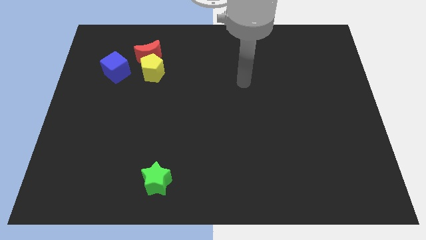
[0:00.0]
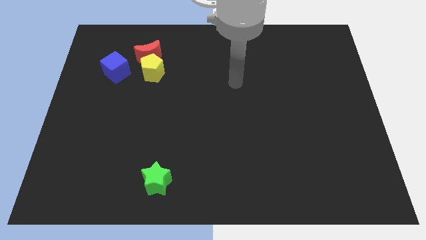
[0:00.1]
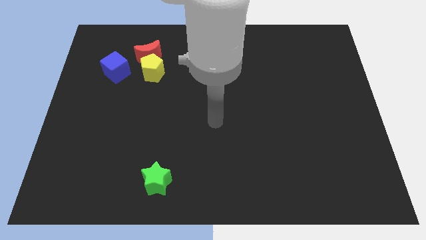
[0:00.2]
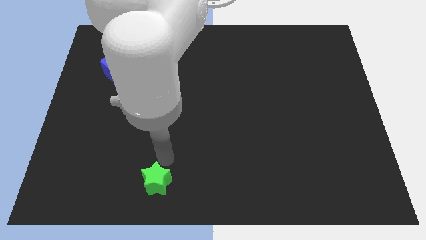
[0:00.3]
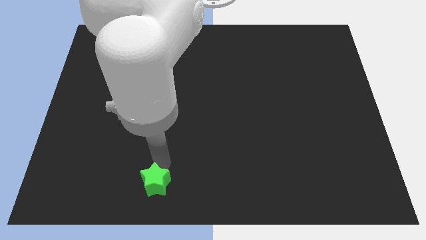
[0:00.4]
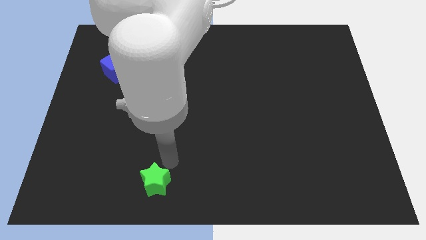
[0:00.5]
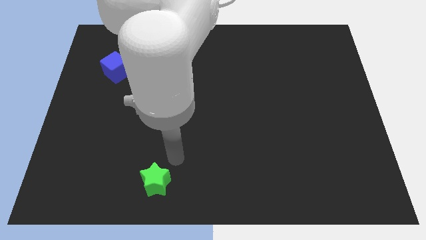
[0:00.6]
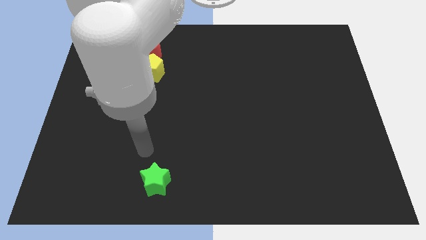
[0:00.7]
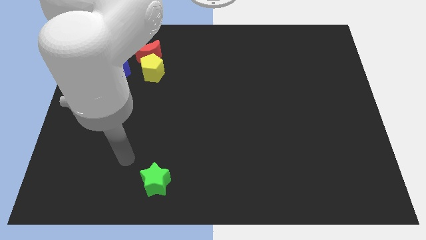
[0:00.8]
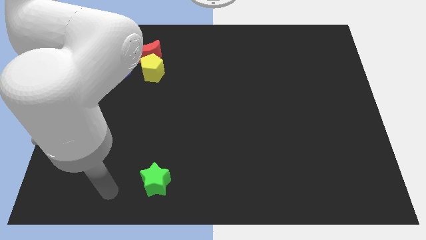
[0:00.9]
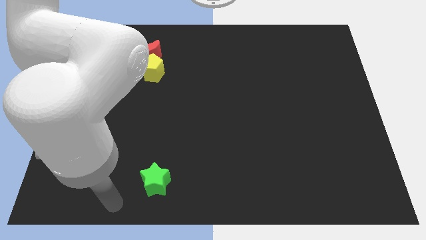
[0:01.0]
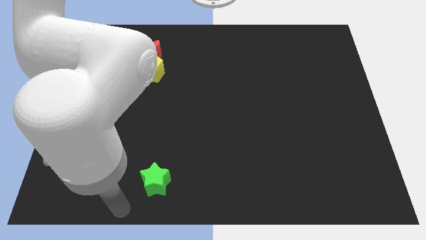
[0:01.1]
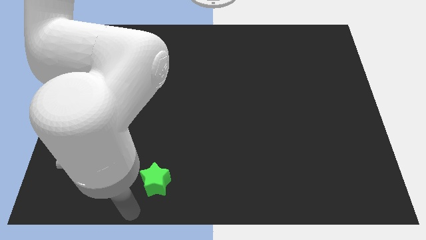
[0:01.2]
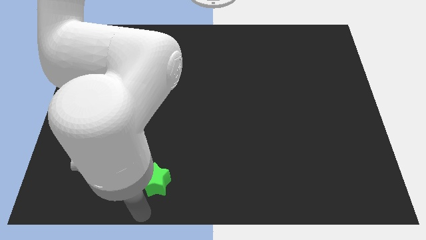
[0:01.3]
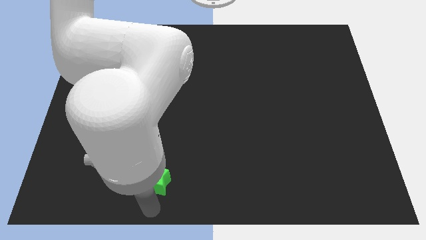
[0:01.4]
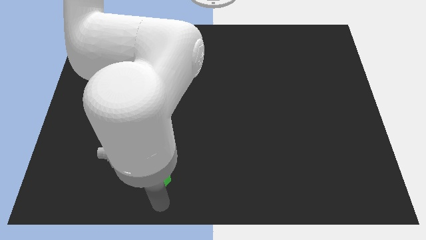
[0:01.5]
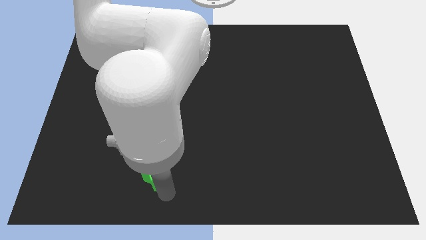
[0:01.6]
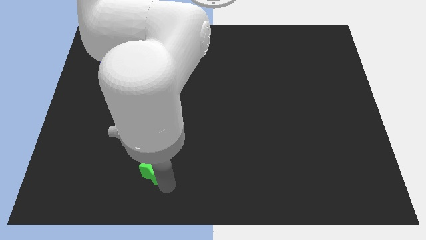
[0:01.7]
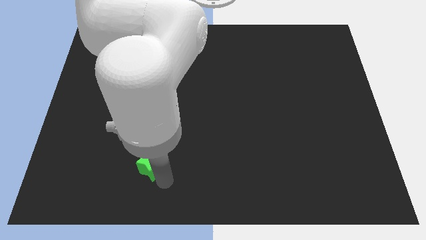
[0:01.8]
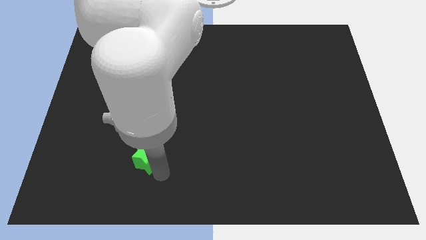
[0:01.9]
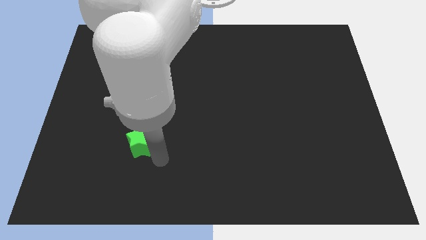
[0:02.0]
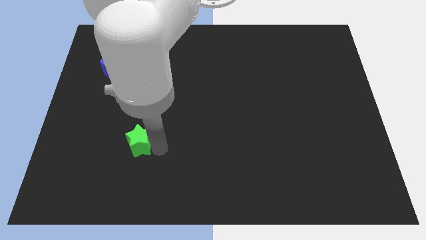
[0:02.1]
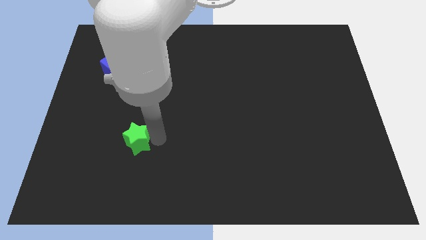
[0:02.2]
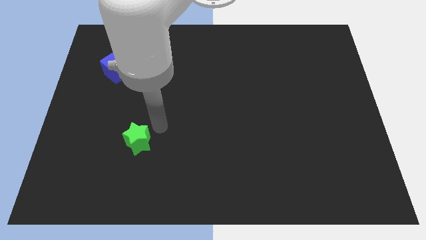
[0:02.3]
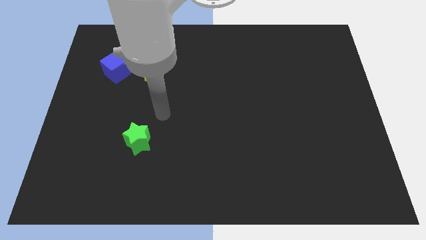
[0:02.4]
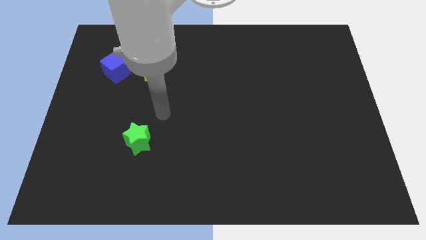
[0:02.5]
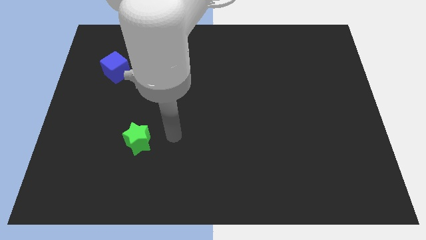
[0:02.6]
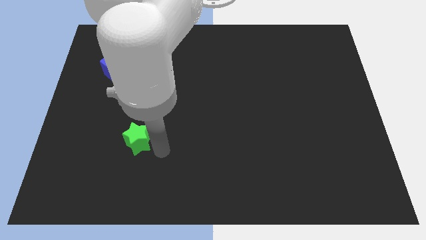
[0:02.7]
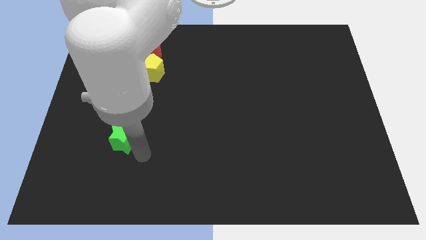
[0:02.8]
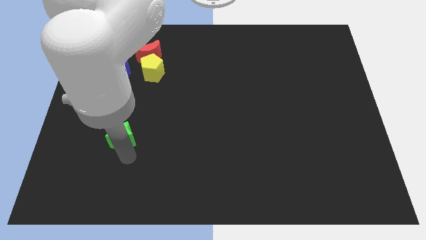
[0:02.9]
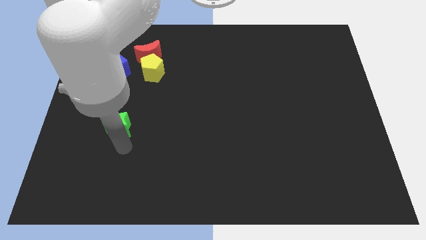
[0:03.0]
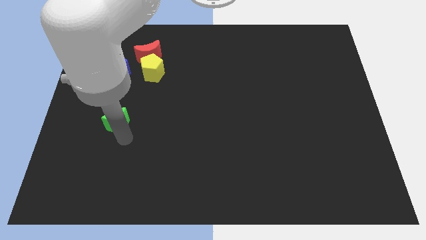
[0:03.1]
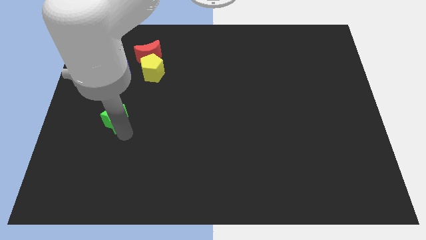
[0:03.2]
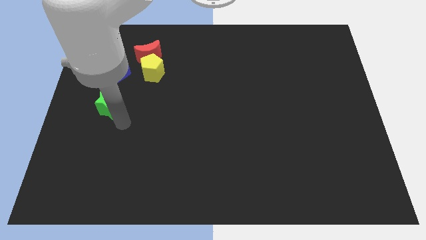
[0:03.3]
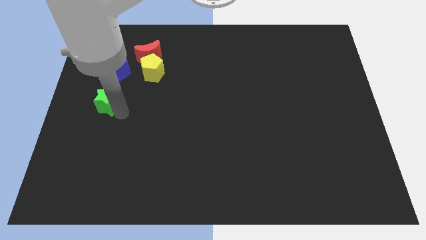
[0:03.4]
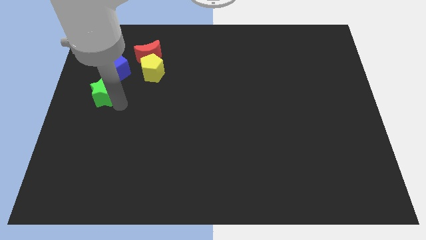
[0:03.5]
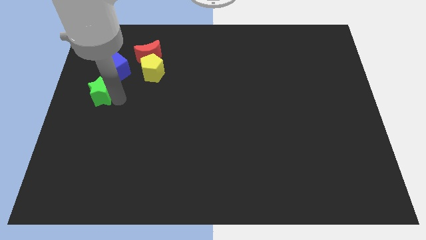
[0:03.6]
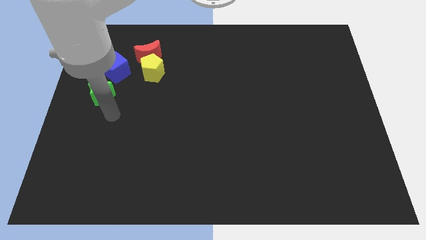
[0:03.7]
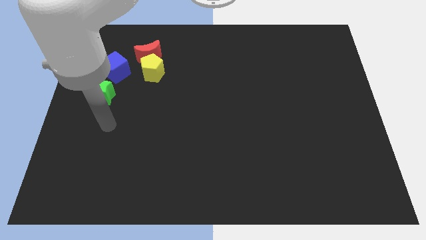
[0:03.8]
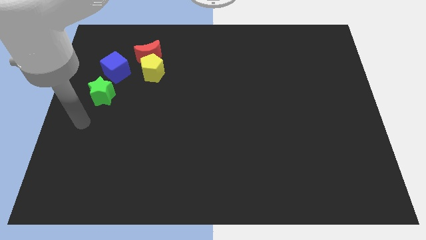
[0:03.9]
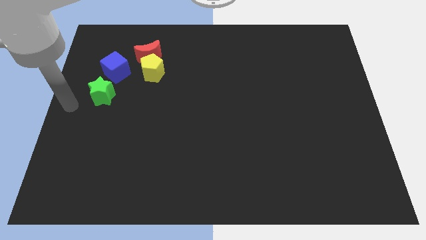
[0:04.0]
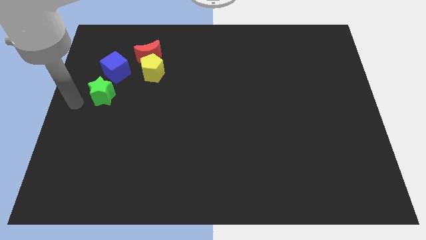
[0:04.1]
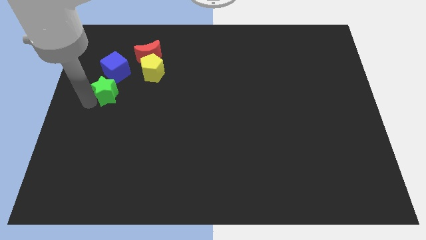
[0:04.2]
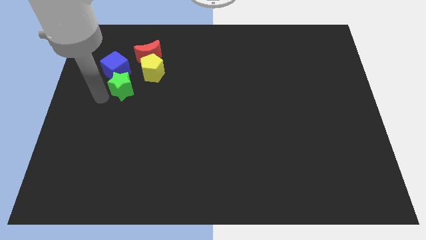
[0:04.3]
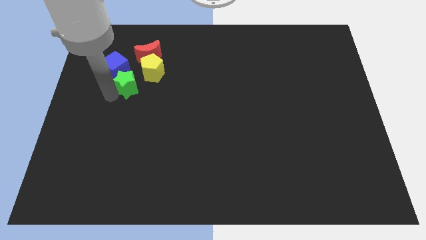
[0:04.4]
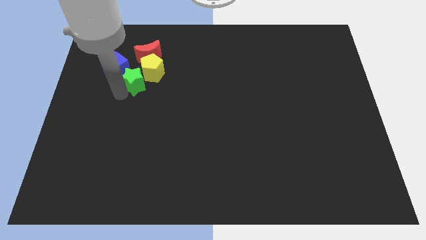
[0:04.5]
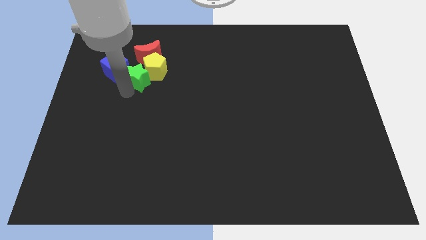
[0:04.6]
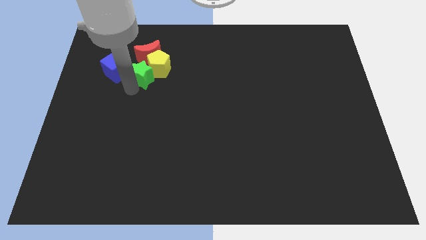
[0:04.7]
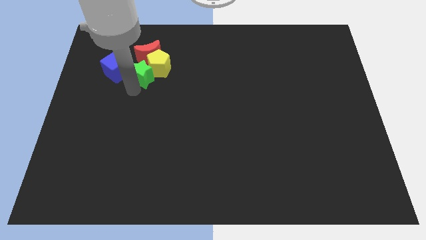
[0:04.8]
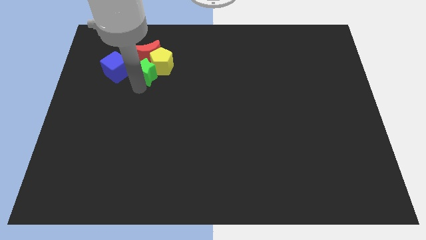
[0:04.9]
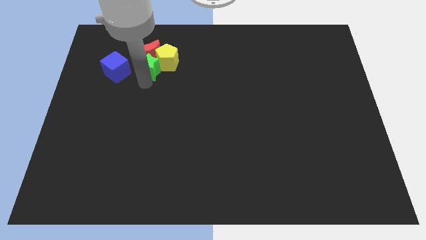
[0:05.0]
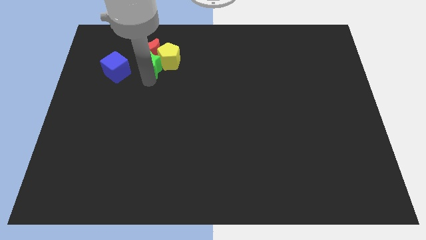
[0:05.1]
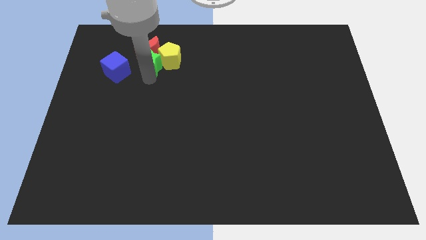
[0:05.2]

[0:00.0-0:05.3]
slide the green block towards the moon

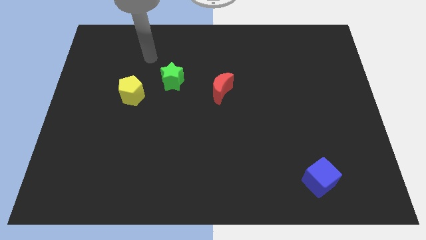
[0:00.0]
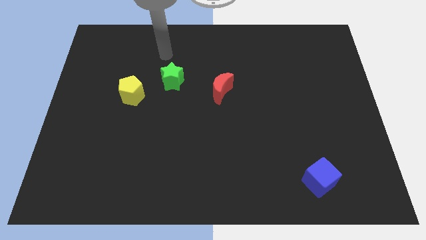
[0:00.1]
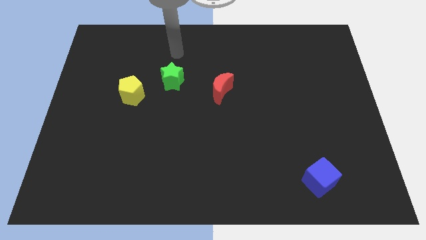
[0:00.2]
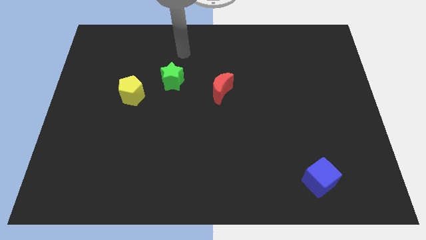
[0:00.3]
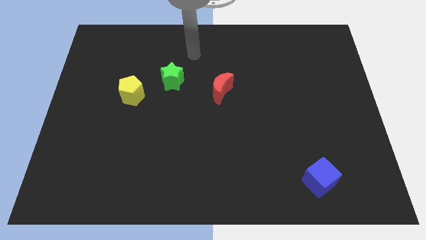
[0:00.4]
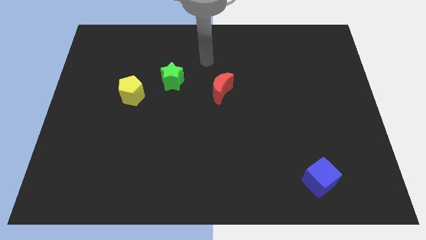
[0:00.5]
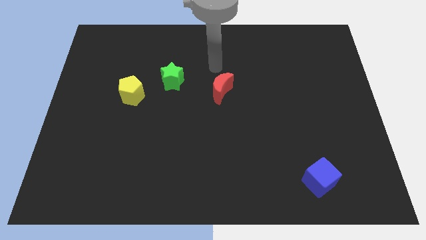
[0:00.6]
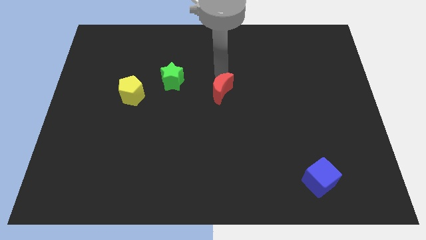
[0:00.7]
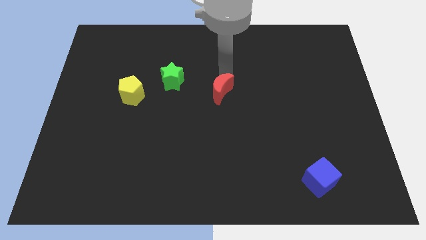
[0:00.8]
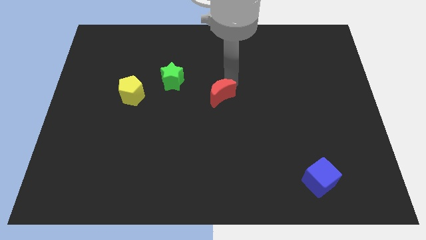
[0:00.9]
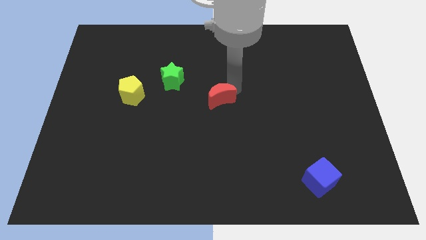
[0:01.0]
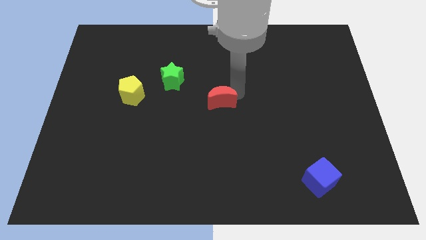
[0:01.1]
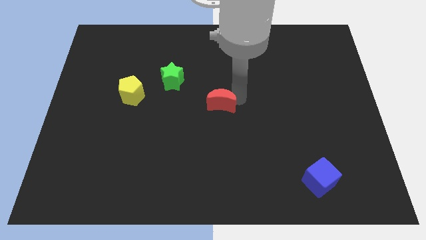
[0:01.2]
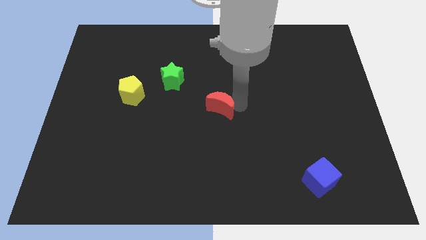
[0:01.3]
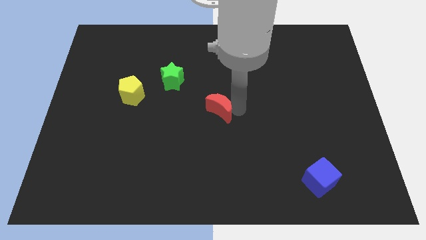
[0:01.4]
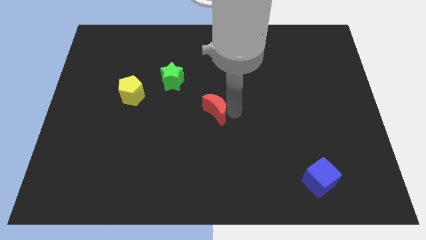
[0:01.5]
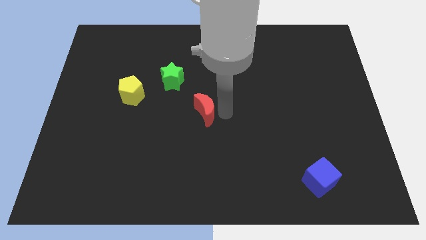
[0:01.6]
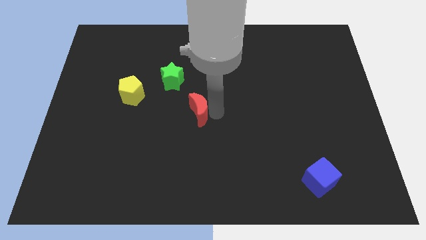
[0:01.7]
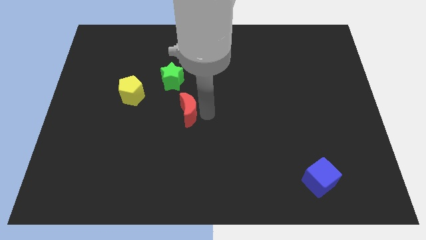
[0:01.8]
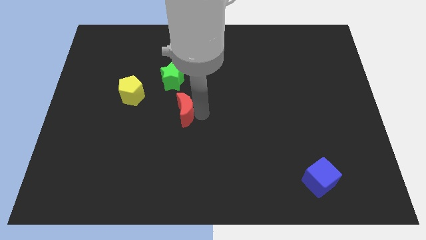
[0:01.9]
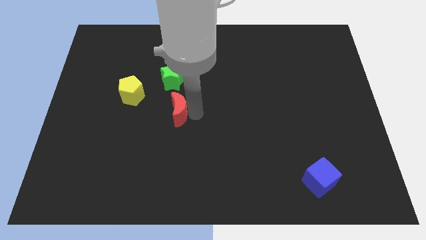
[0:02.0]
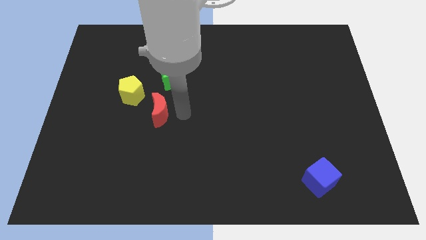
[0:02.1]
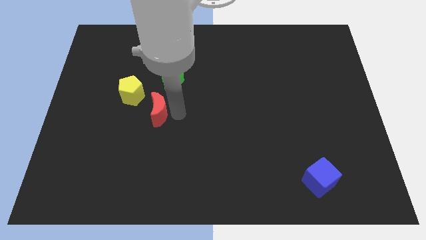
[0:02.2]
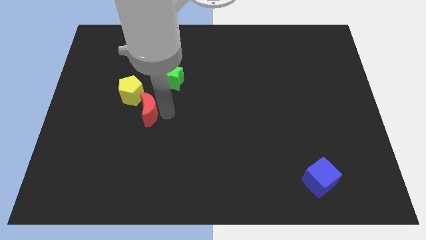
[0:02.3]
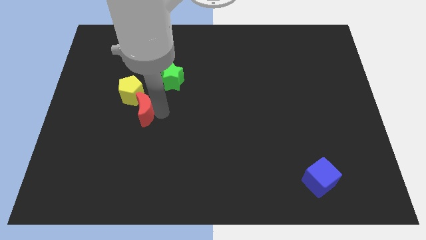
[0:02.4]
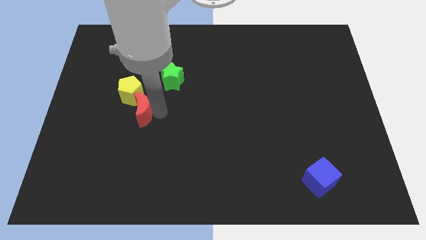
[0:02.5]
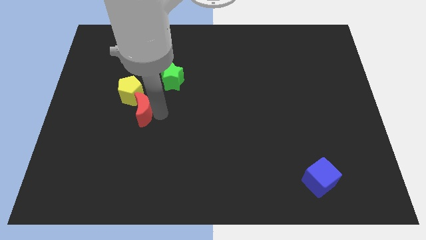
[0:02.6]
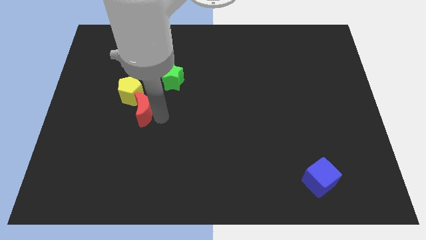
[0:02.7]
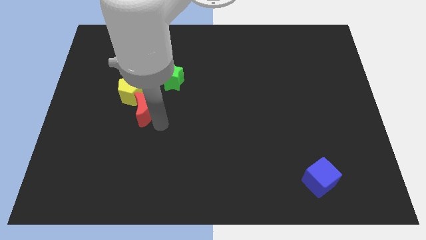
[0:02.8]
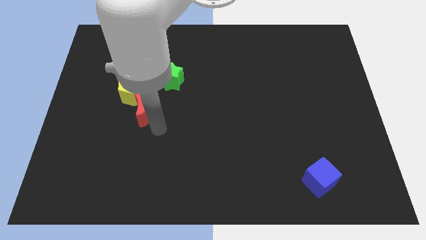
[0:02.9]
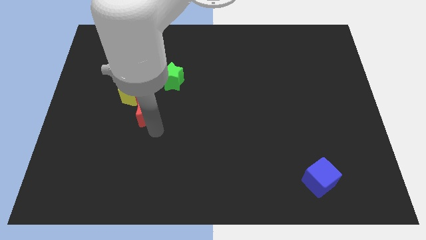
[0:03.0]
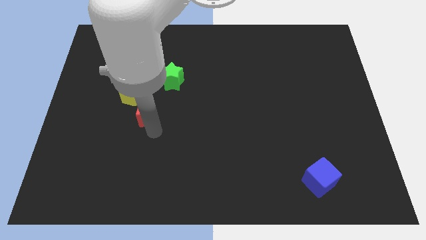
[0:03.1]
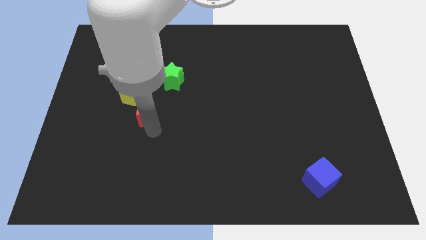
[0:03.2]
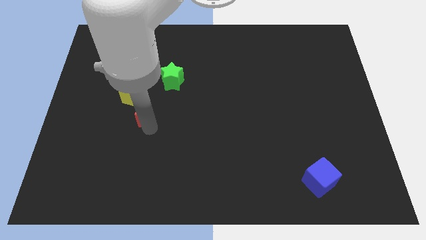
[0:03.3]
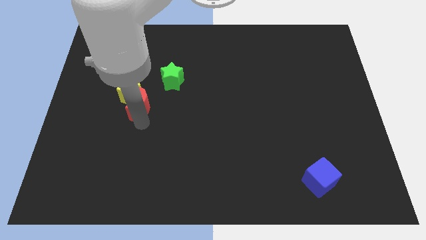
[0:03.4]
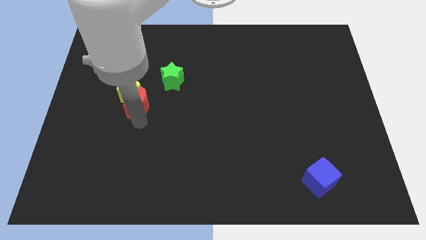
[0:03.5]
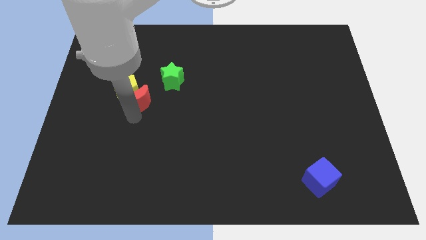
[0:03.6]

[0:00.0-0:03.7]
push the red moon close to the yellow pentagon
